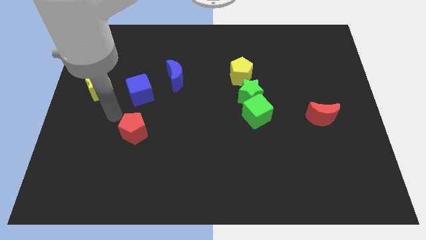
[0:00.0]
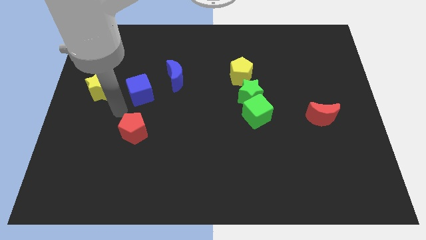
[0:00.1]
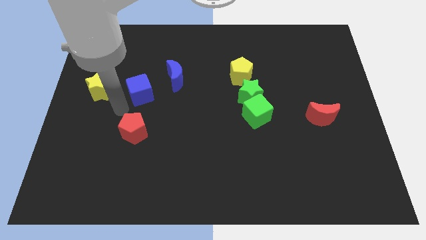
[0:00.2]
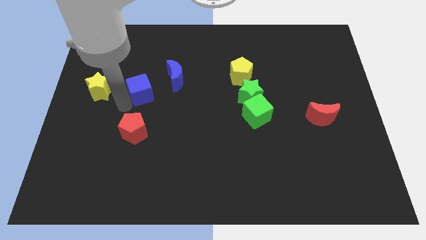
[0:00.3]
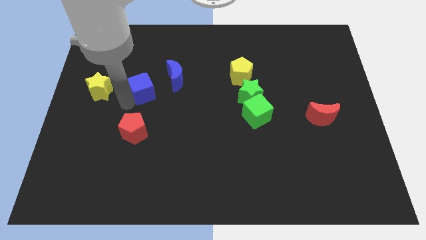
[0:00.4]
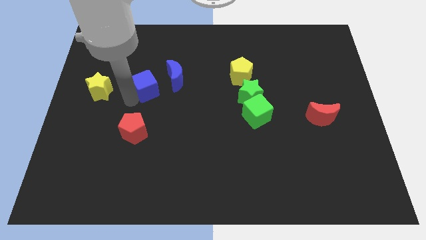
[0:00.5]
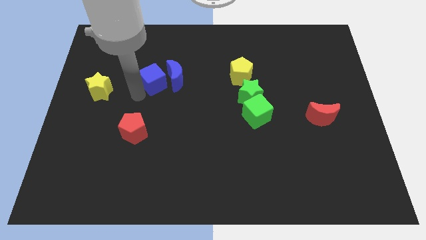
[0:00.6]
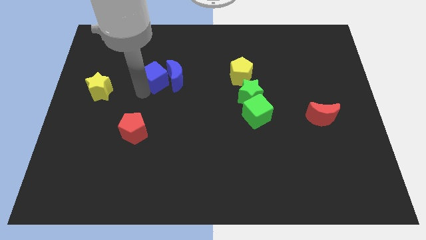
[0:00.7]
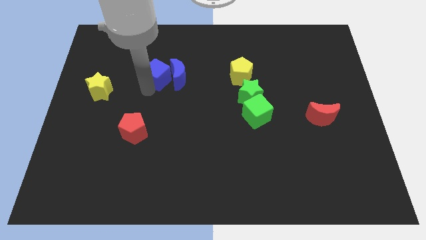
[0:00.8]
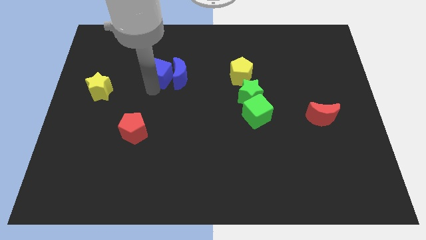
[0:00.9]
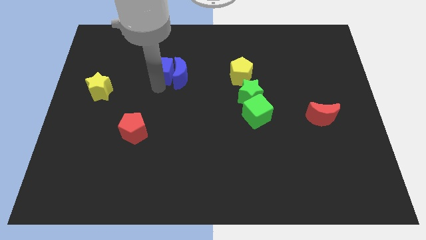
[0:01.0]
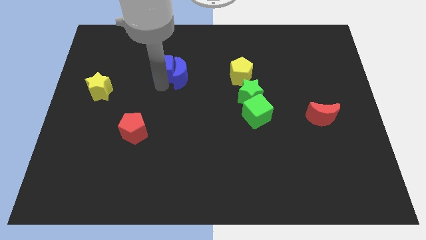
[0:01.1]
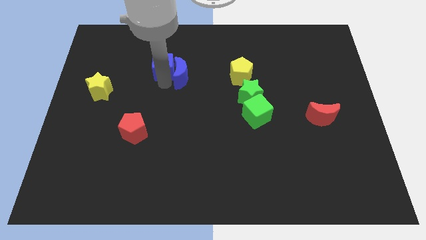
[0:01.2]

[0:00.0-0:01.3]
push the blue cube into the blue moon

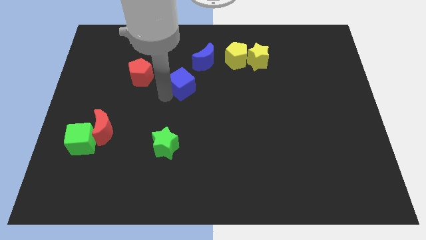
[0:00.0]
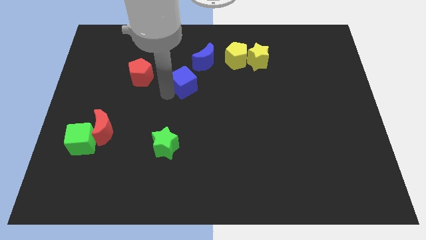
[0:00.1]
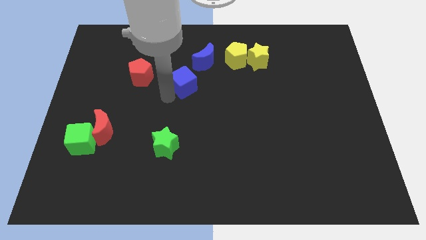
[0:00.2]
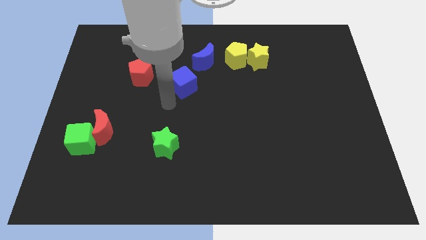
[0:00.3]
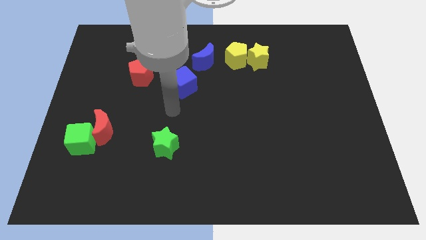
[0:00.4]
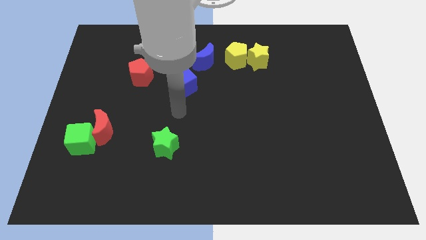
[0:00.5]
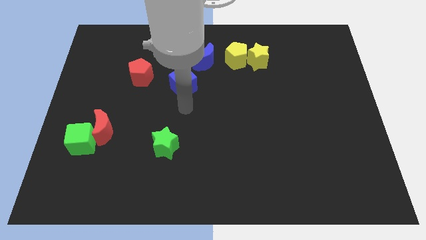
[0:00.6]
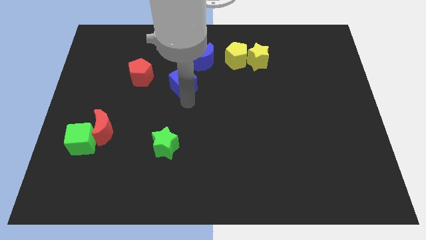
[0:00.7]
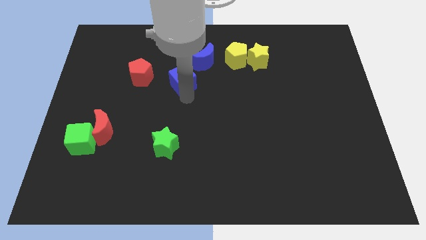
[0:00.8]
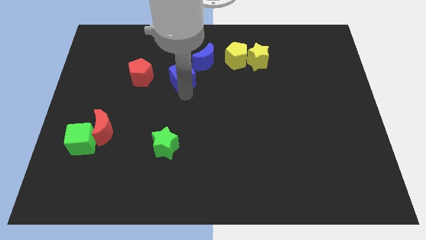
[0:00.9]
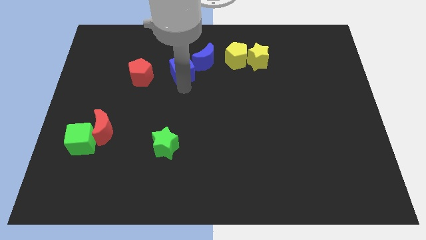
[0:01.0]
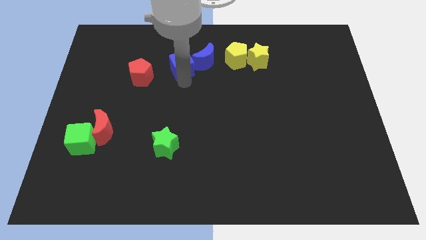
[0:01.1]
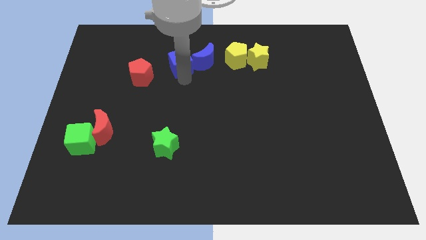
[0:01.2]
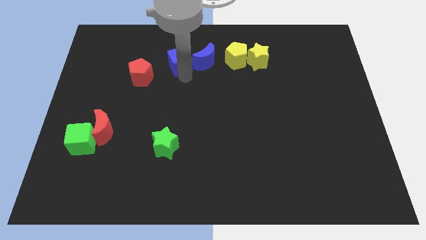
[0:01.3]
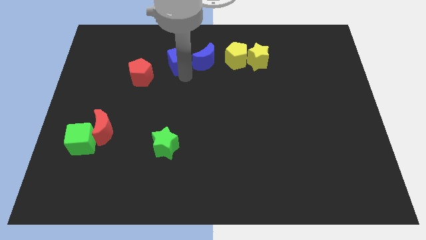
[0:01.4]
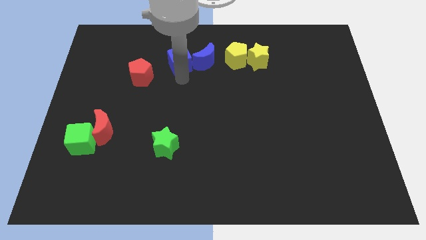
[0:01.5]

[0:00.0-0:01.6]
place the blue cube to the left of the blue crescent

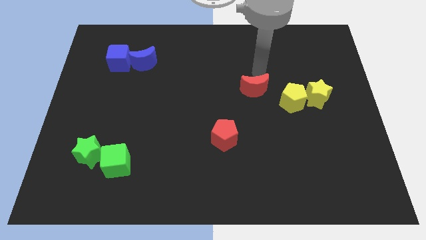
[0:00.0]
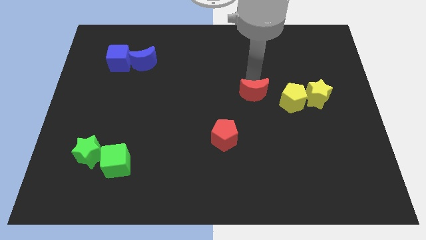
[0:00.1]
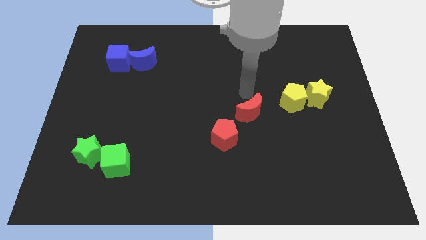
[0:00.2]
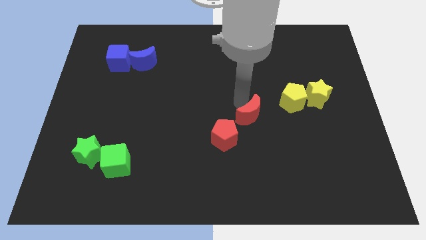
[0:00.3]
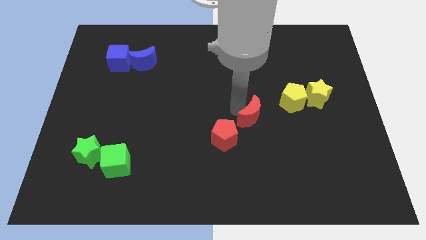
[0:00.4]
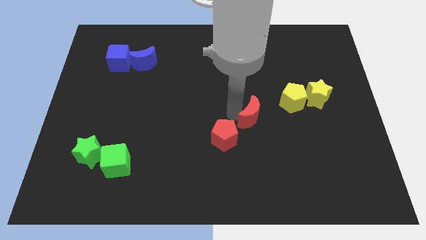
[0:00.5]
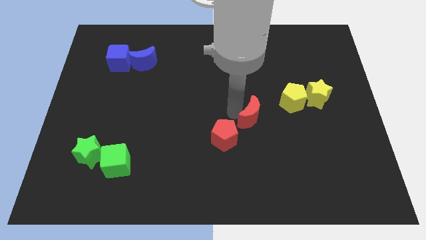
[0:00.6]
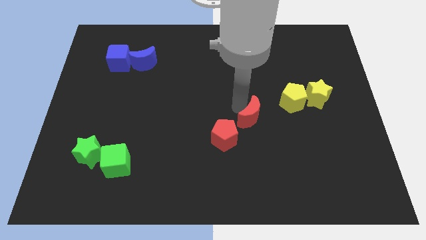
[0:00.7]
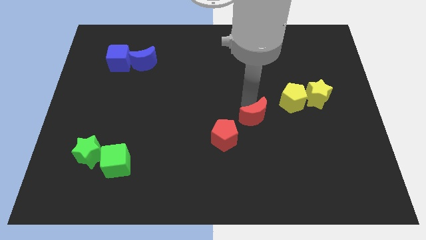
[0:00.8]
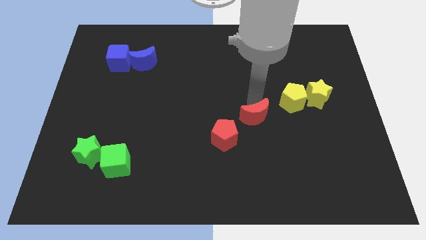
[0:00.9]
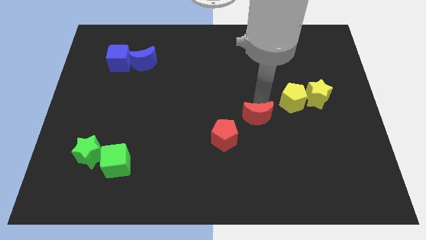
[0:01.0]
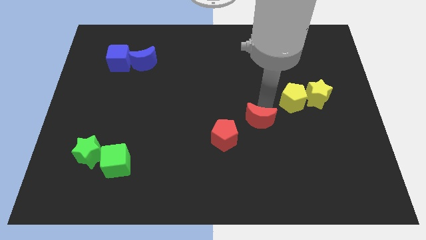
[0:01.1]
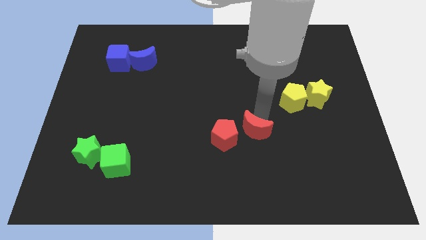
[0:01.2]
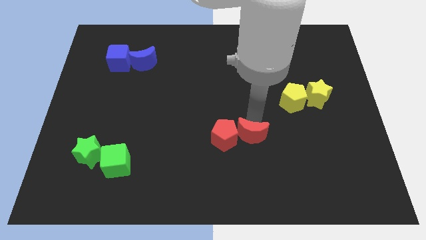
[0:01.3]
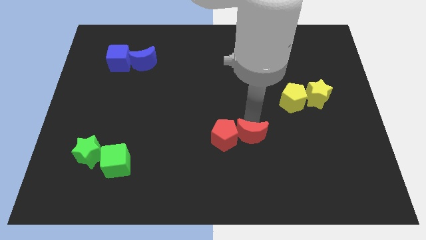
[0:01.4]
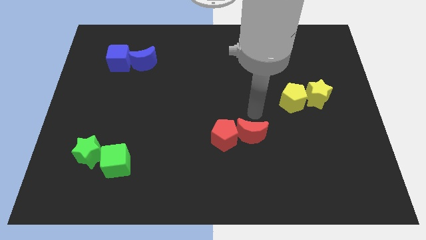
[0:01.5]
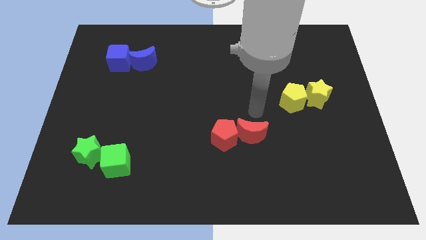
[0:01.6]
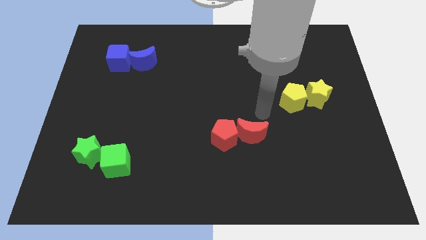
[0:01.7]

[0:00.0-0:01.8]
push the red crescent to the right of the red pentagon

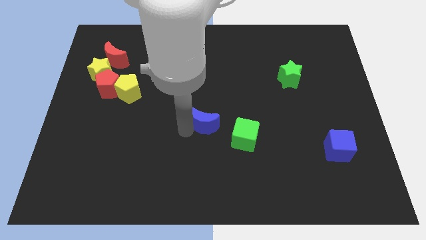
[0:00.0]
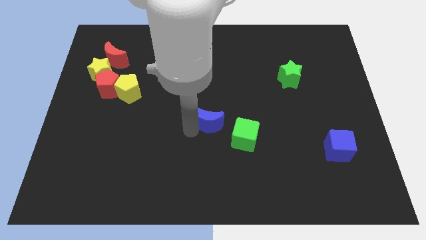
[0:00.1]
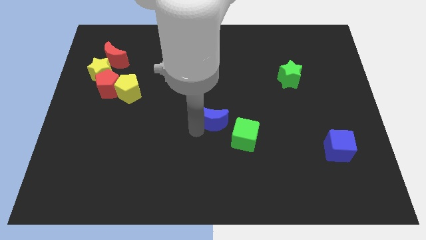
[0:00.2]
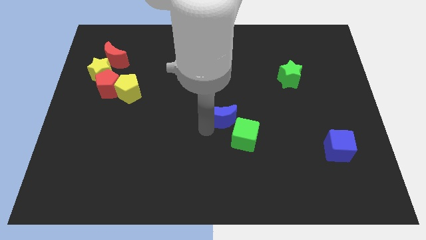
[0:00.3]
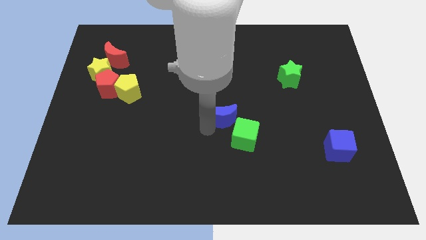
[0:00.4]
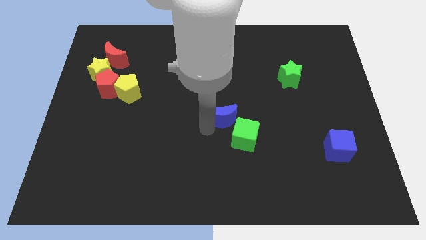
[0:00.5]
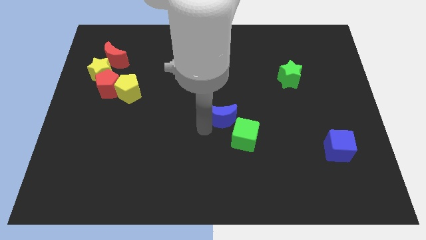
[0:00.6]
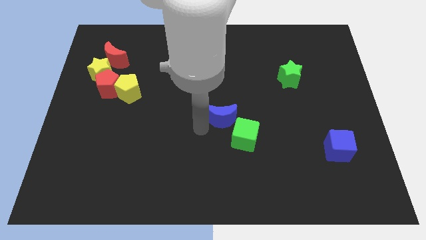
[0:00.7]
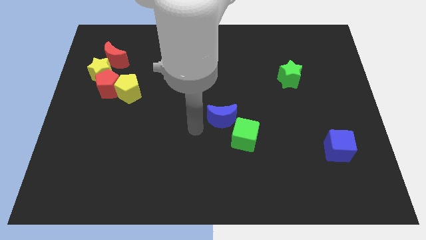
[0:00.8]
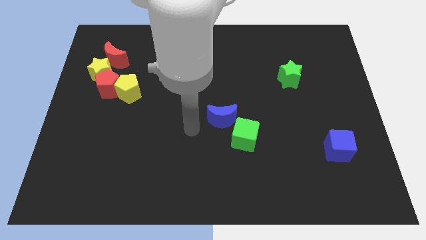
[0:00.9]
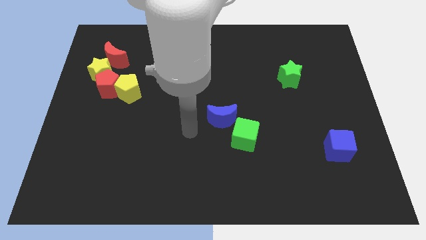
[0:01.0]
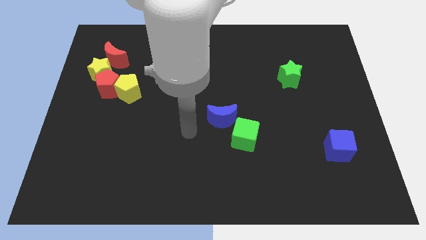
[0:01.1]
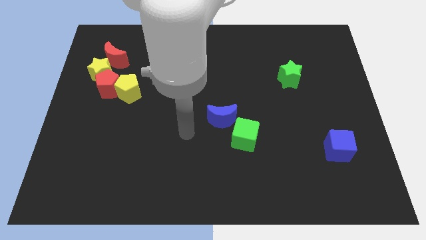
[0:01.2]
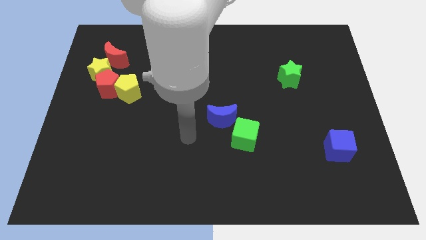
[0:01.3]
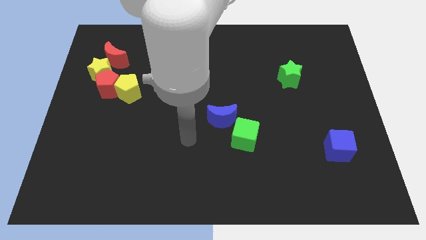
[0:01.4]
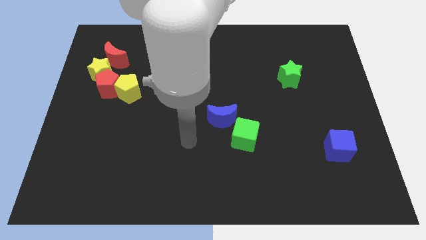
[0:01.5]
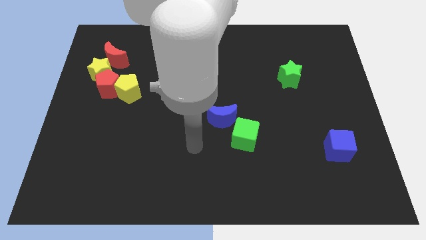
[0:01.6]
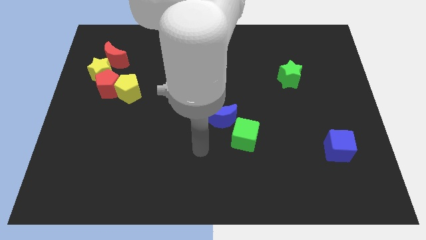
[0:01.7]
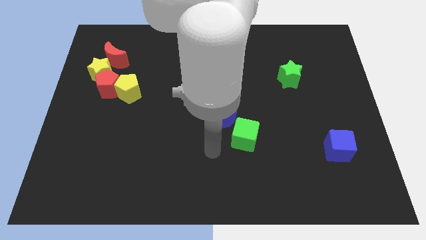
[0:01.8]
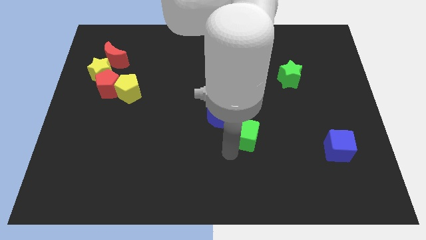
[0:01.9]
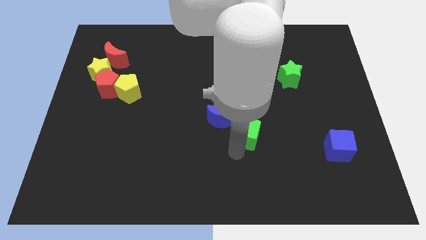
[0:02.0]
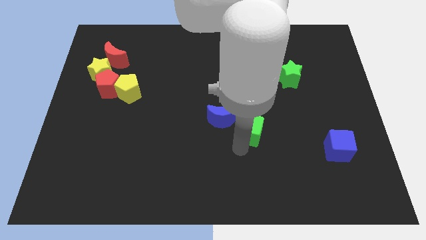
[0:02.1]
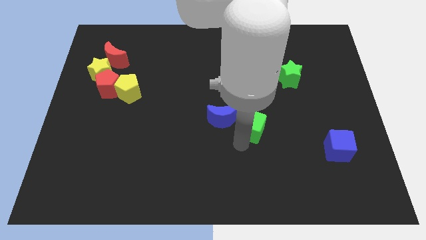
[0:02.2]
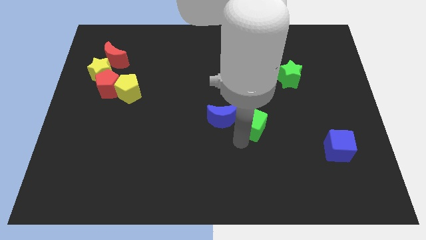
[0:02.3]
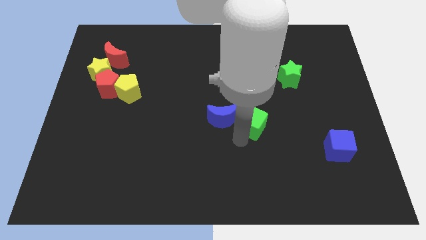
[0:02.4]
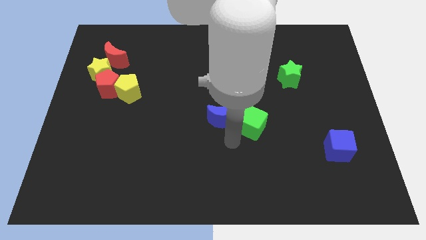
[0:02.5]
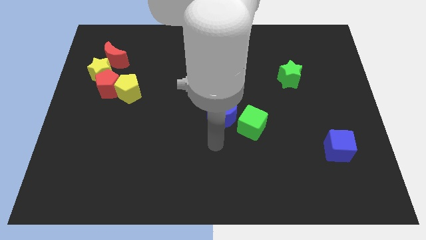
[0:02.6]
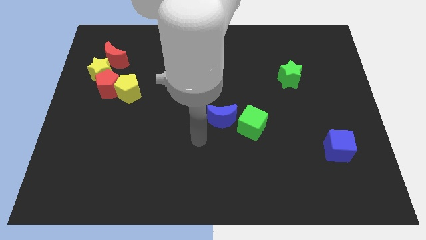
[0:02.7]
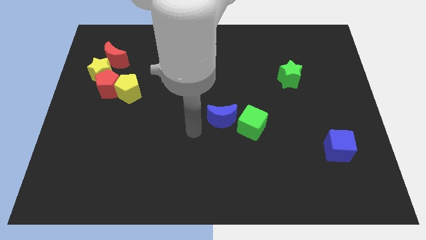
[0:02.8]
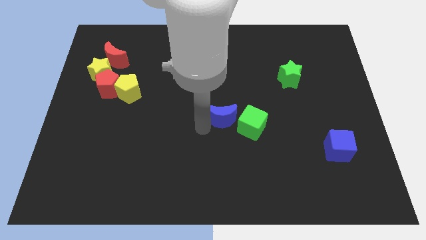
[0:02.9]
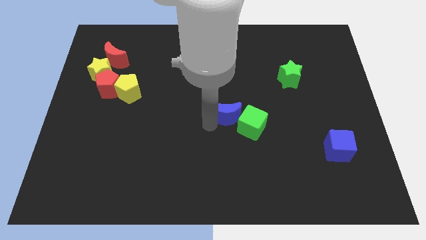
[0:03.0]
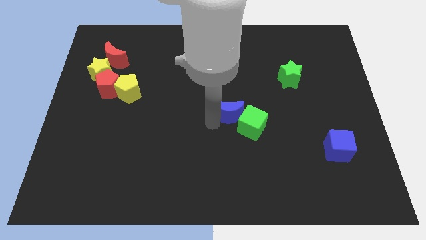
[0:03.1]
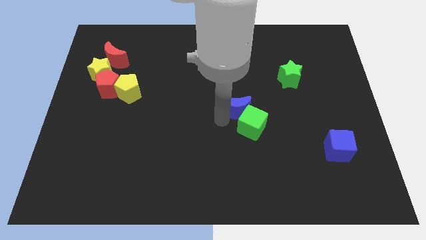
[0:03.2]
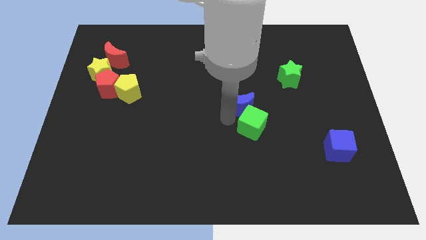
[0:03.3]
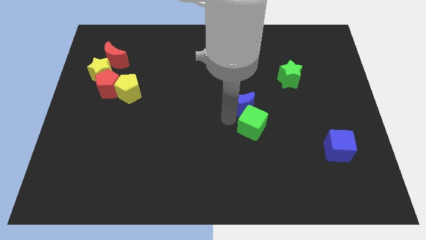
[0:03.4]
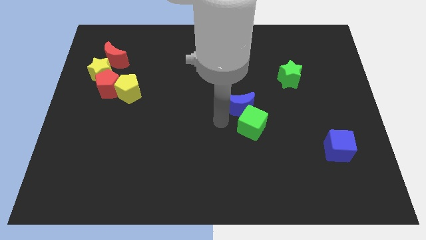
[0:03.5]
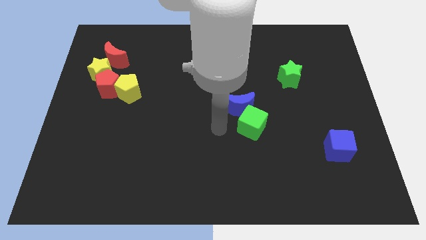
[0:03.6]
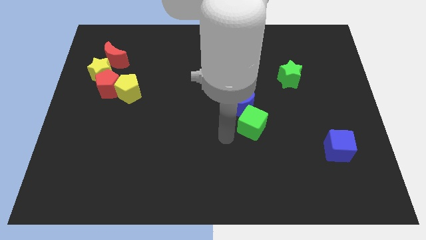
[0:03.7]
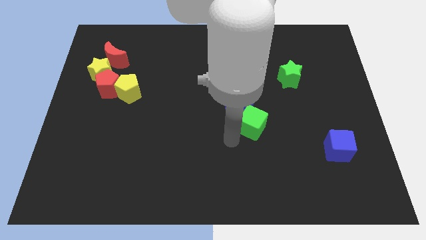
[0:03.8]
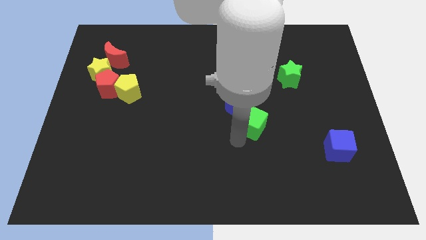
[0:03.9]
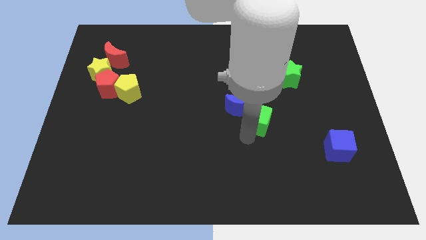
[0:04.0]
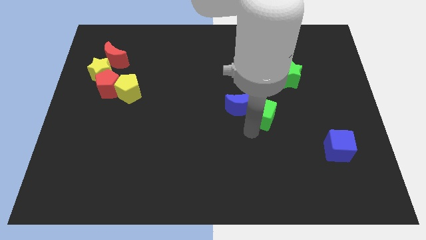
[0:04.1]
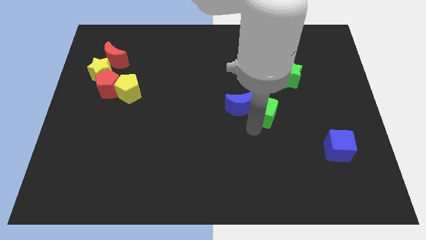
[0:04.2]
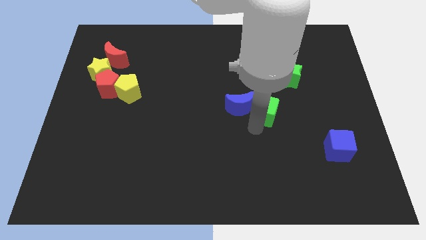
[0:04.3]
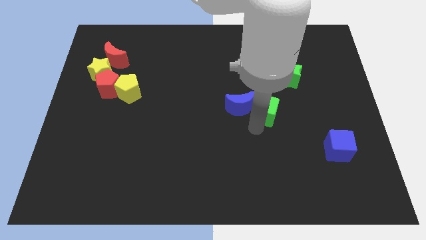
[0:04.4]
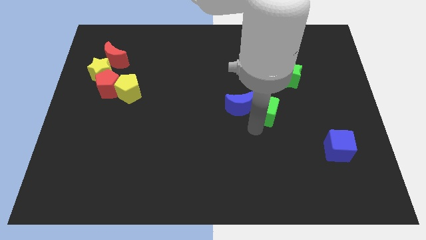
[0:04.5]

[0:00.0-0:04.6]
push the blue moon and the green cube towards the center of the board
